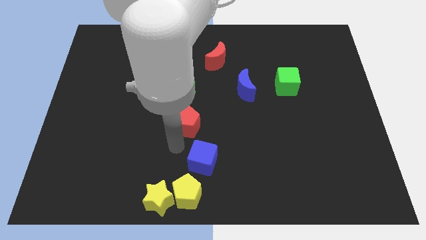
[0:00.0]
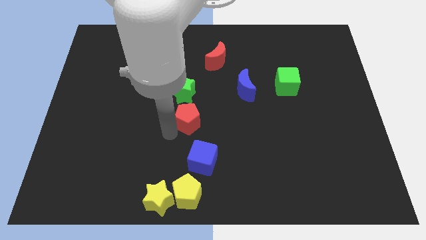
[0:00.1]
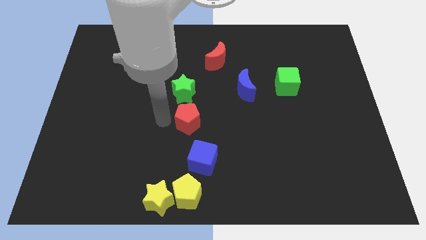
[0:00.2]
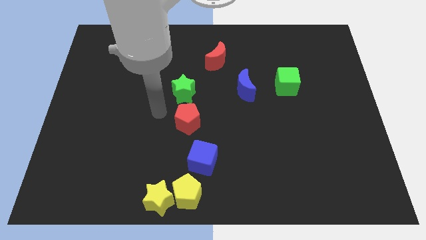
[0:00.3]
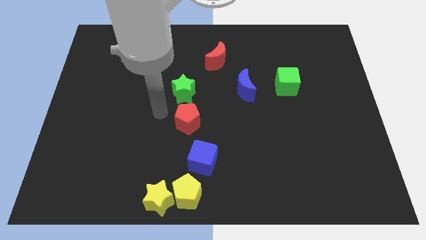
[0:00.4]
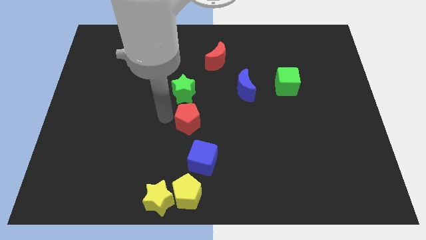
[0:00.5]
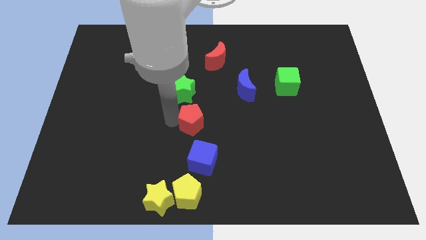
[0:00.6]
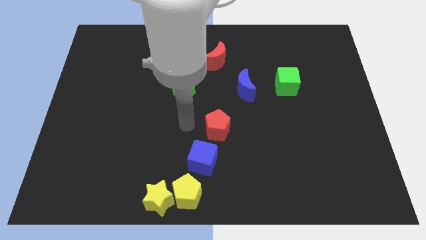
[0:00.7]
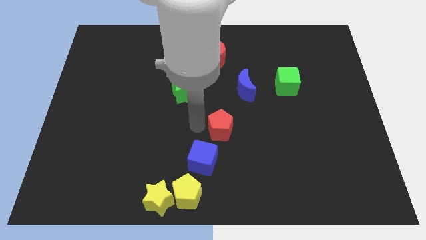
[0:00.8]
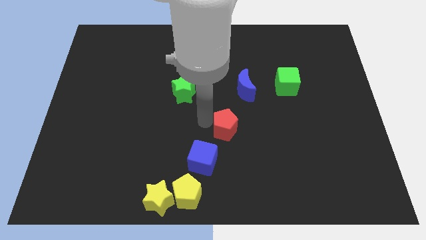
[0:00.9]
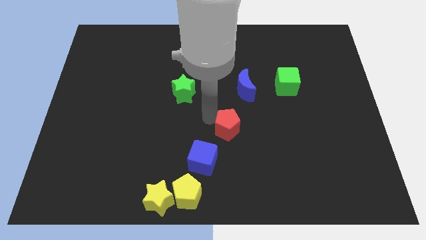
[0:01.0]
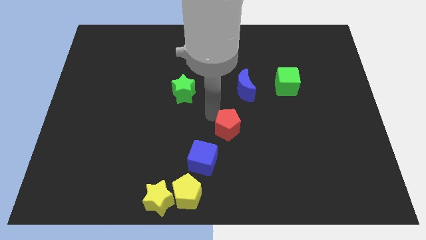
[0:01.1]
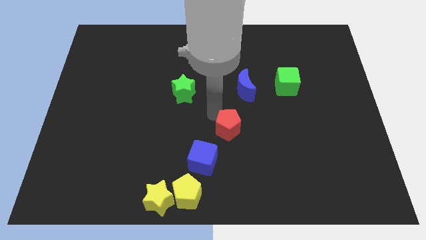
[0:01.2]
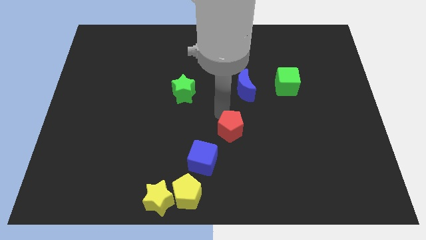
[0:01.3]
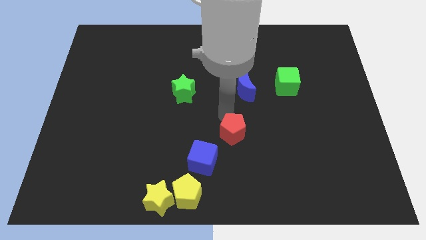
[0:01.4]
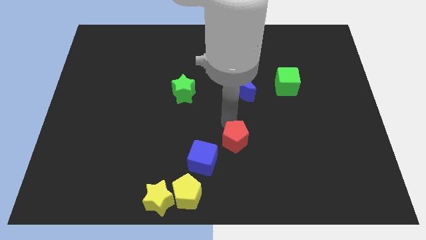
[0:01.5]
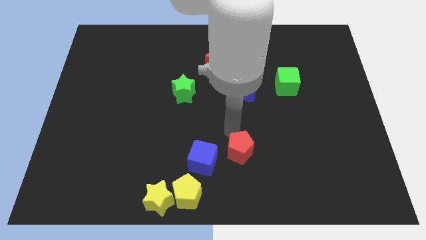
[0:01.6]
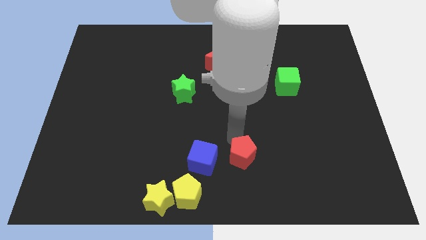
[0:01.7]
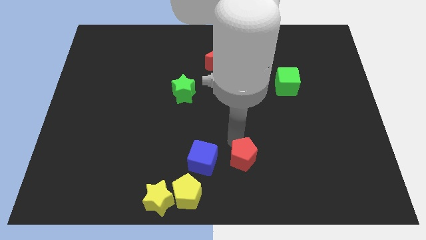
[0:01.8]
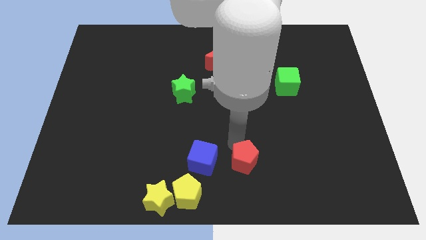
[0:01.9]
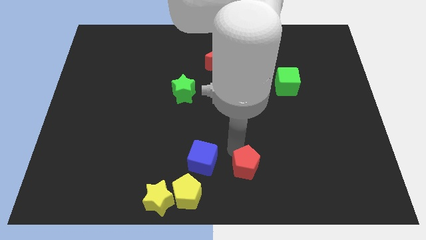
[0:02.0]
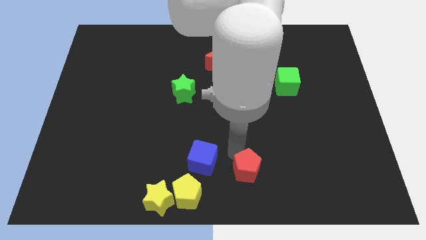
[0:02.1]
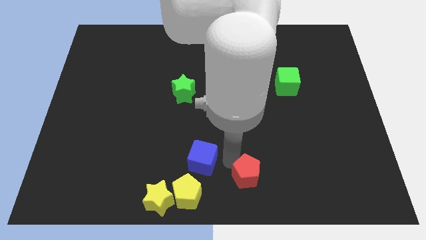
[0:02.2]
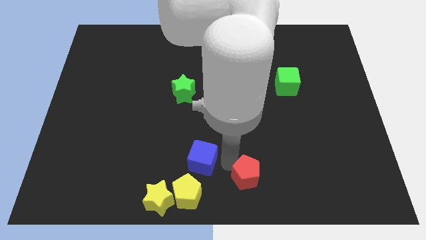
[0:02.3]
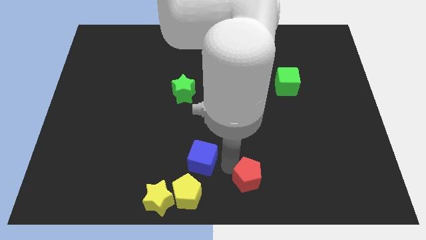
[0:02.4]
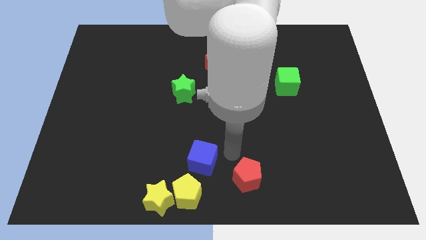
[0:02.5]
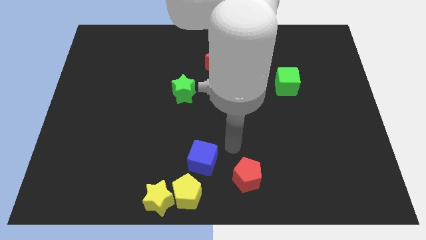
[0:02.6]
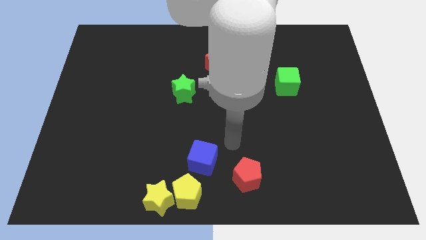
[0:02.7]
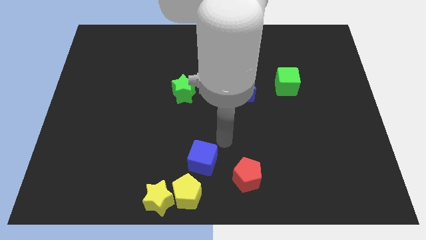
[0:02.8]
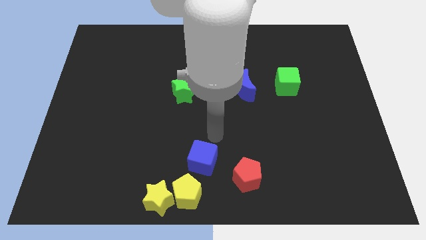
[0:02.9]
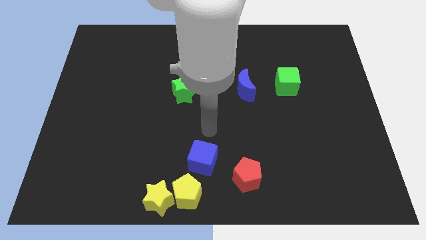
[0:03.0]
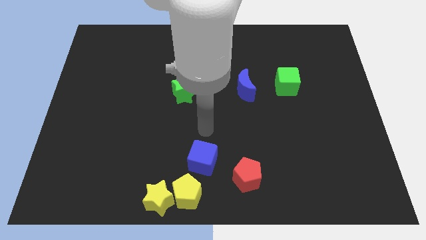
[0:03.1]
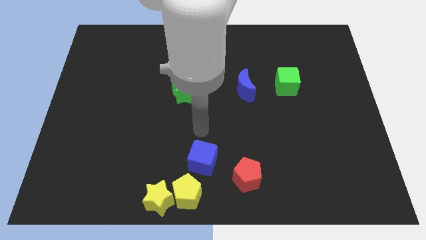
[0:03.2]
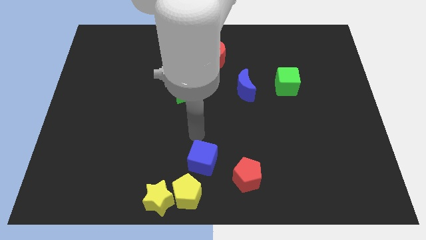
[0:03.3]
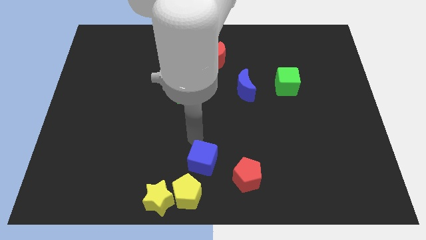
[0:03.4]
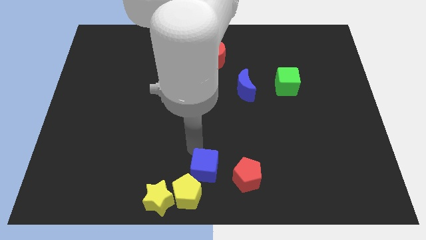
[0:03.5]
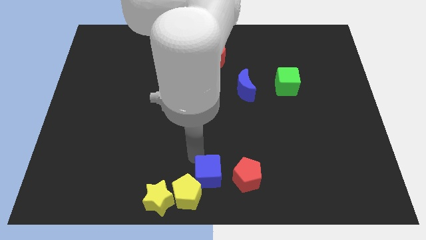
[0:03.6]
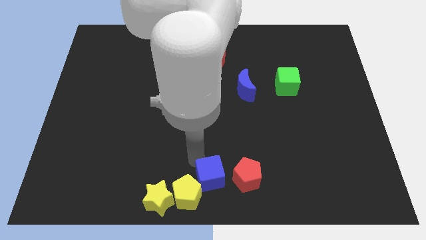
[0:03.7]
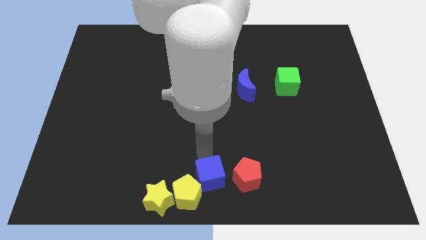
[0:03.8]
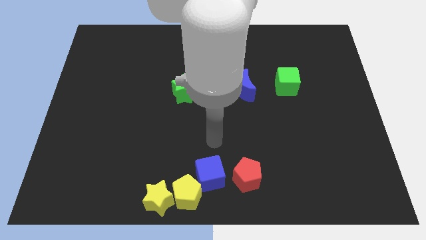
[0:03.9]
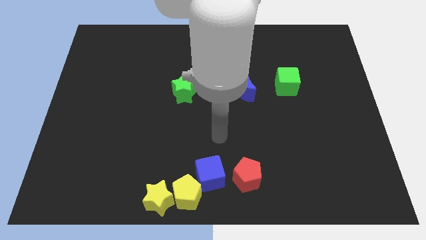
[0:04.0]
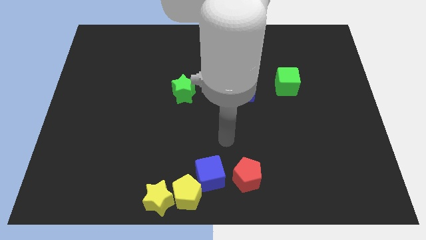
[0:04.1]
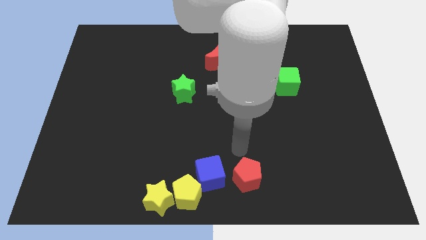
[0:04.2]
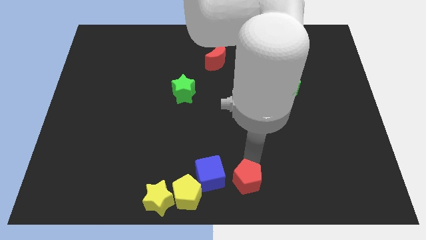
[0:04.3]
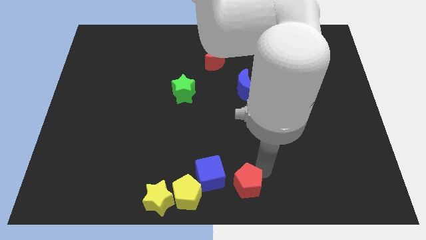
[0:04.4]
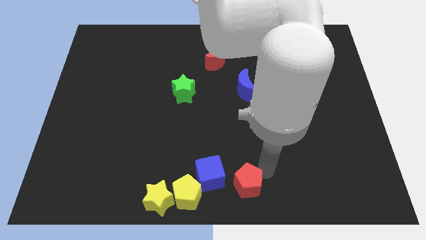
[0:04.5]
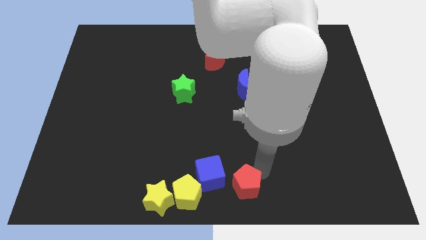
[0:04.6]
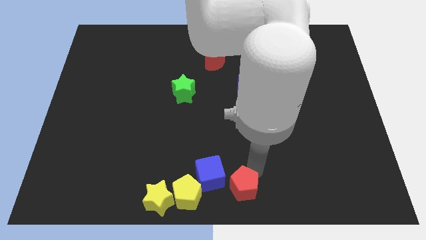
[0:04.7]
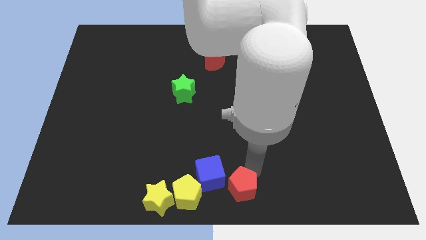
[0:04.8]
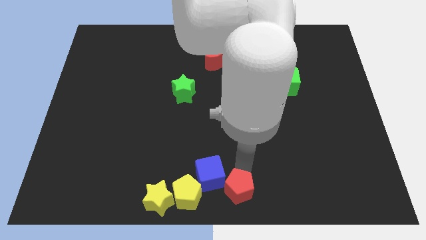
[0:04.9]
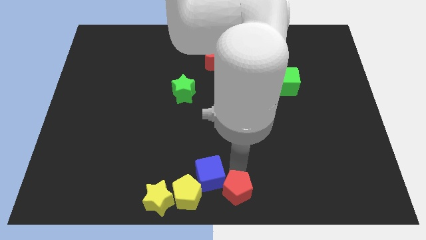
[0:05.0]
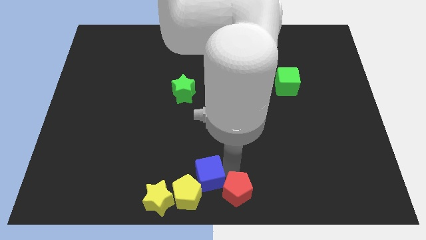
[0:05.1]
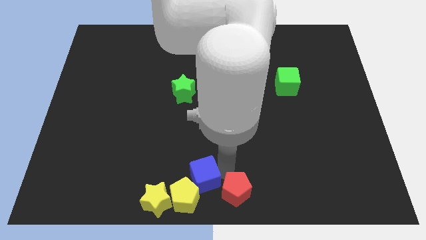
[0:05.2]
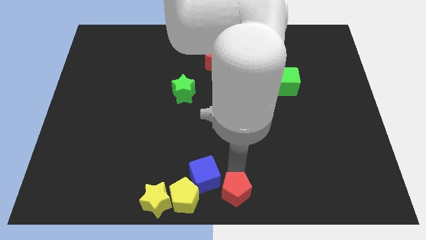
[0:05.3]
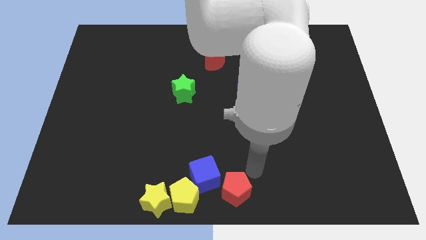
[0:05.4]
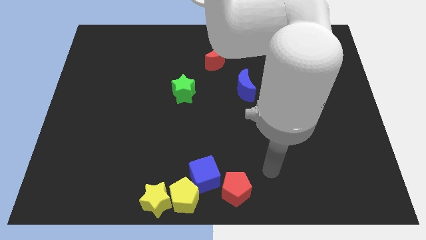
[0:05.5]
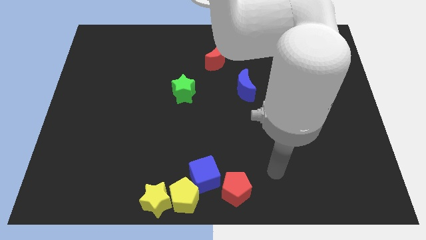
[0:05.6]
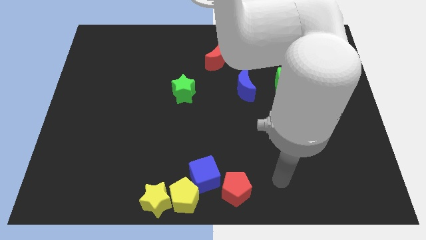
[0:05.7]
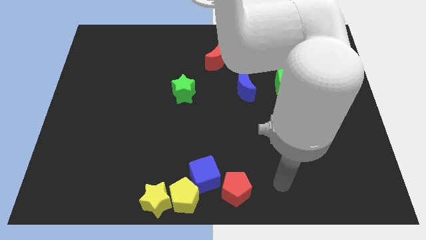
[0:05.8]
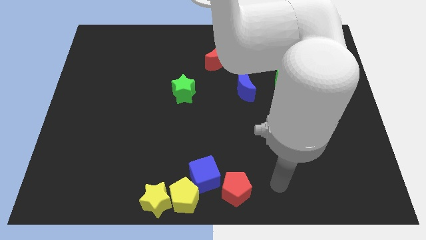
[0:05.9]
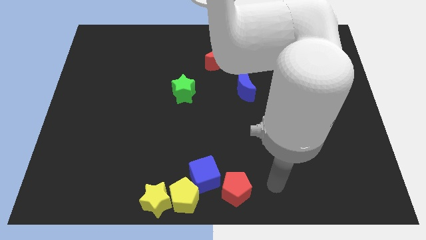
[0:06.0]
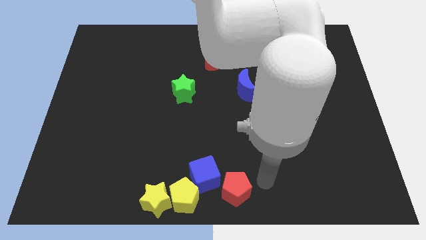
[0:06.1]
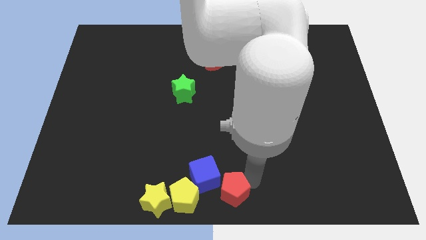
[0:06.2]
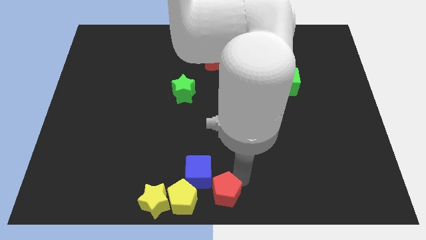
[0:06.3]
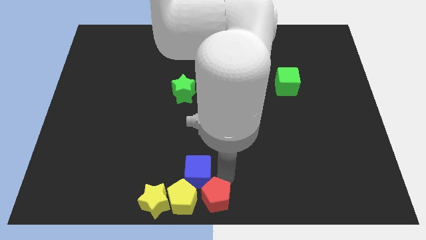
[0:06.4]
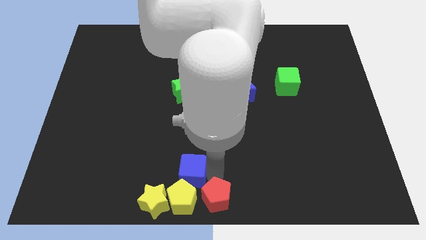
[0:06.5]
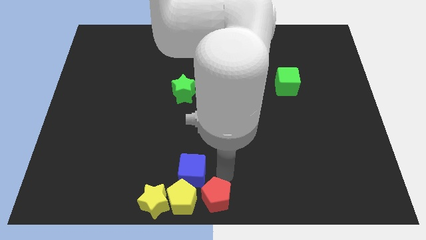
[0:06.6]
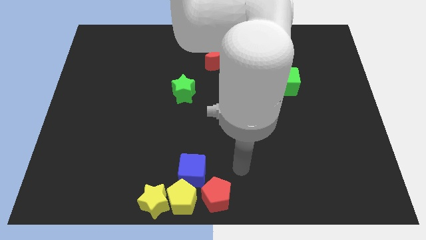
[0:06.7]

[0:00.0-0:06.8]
push the red pentagon and blue cube into the yellow pentagon

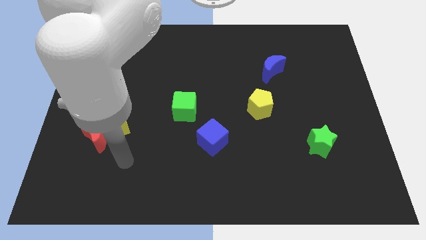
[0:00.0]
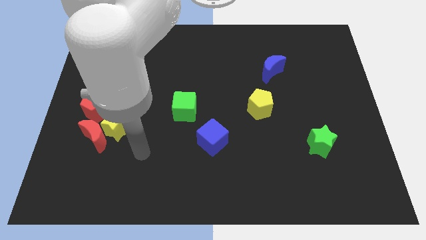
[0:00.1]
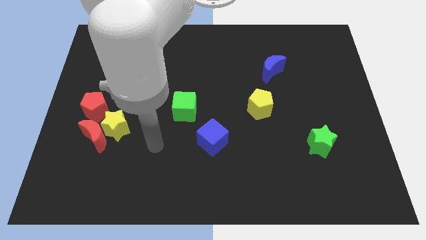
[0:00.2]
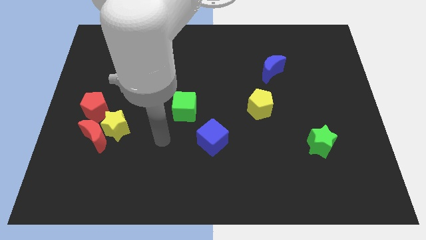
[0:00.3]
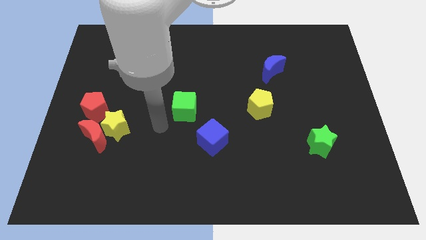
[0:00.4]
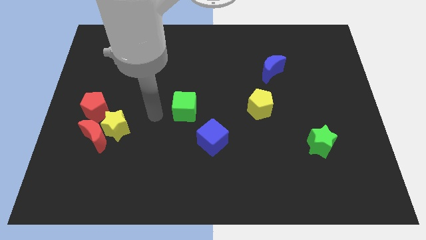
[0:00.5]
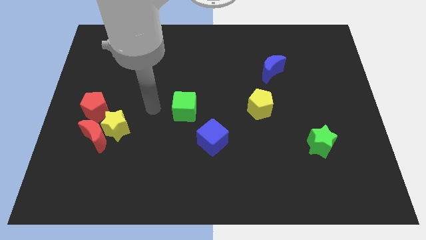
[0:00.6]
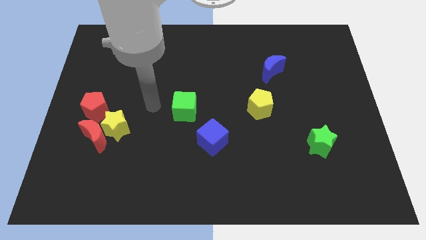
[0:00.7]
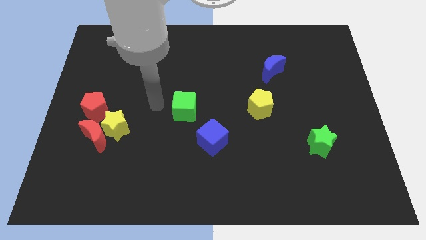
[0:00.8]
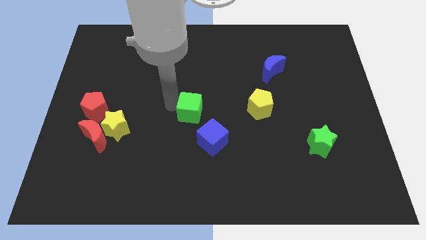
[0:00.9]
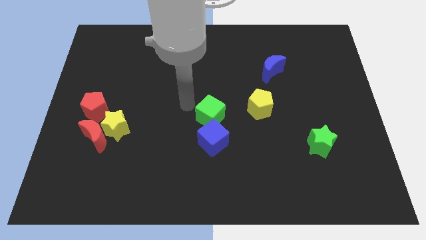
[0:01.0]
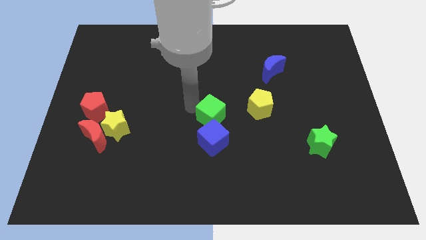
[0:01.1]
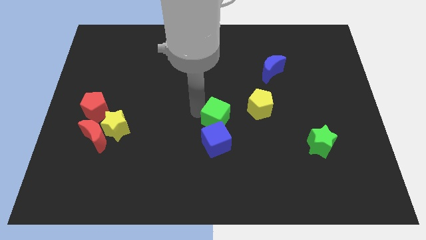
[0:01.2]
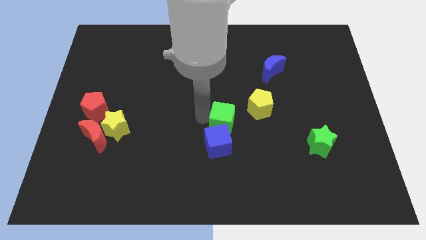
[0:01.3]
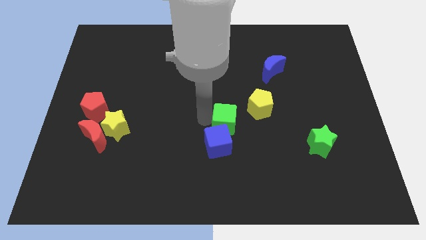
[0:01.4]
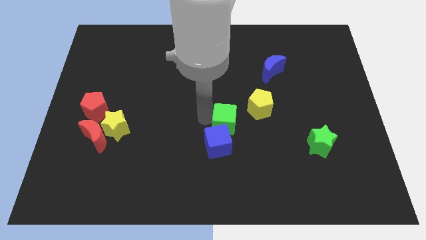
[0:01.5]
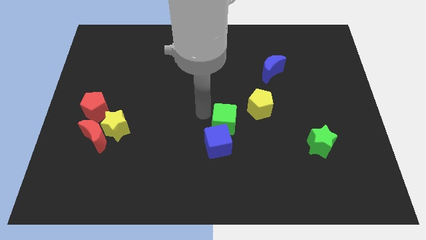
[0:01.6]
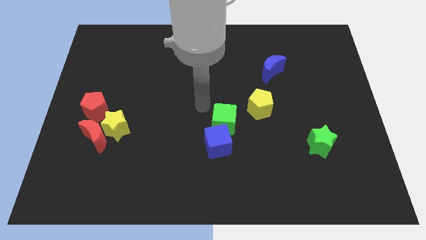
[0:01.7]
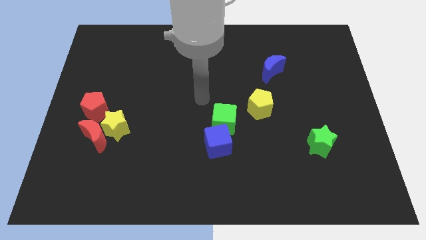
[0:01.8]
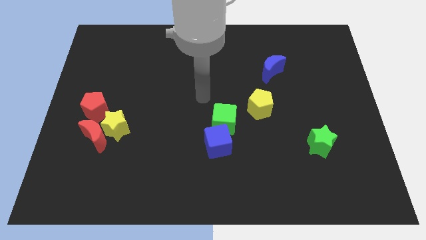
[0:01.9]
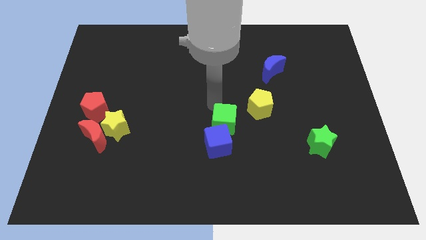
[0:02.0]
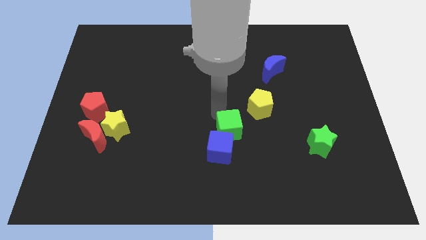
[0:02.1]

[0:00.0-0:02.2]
move the green star towards the center
